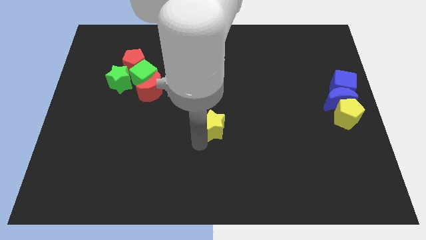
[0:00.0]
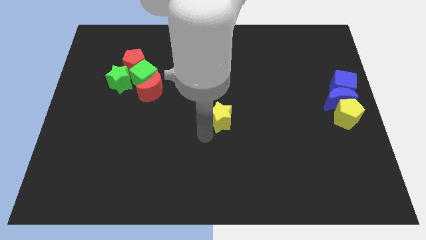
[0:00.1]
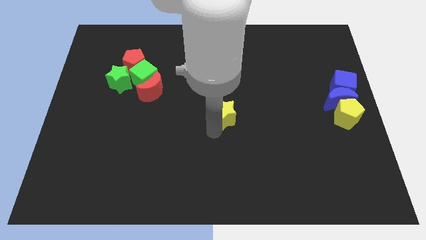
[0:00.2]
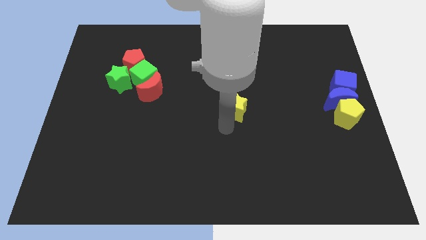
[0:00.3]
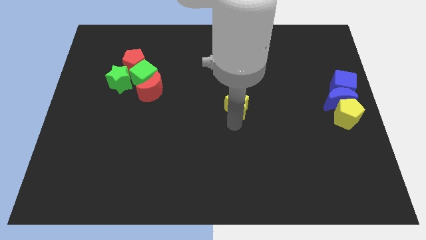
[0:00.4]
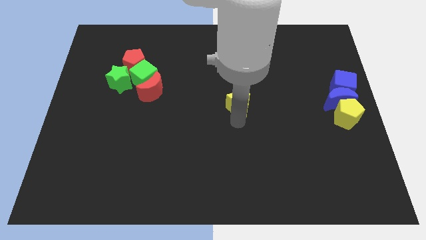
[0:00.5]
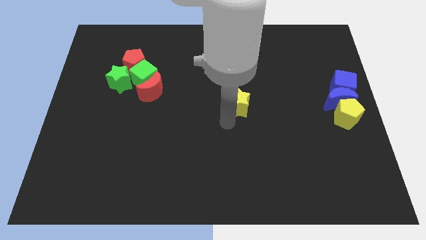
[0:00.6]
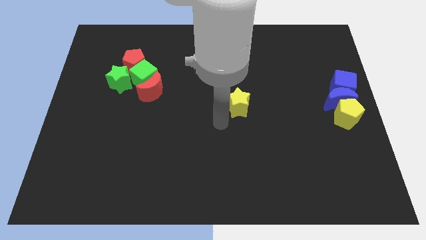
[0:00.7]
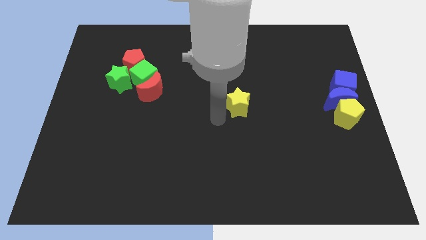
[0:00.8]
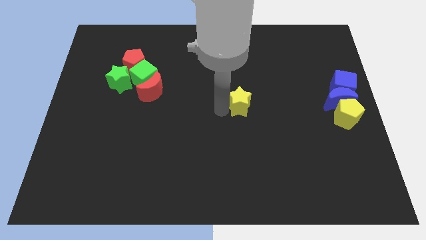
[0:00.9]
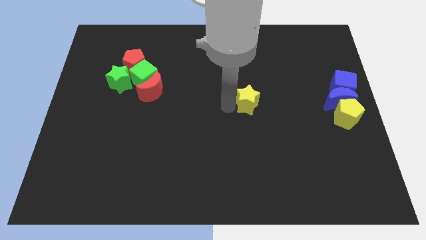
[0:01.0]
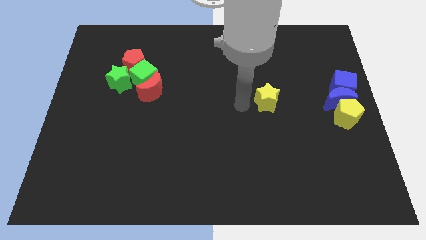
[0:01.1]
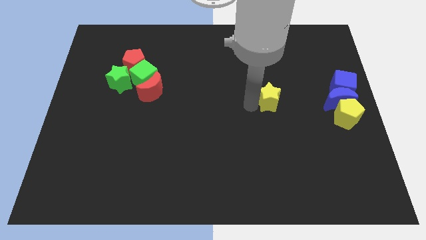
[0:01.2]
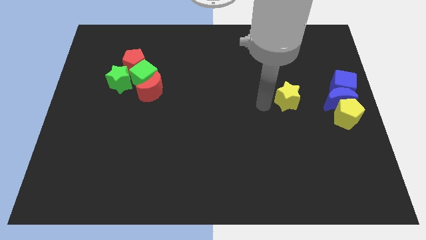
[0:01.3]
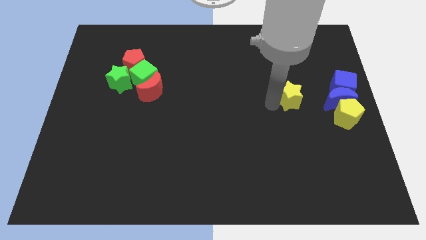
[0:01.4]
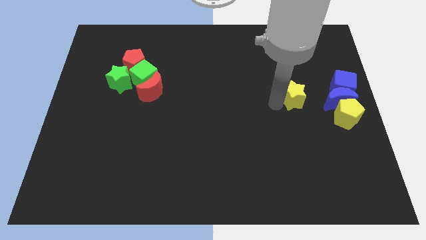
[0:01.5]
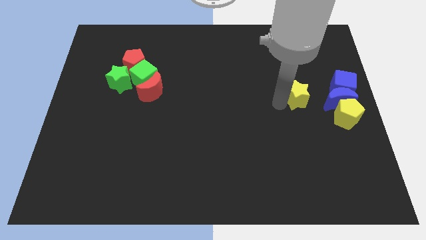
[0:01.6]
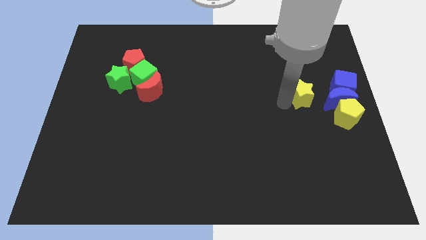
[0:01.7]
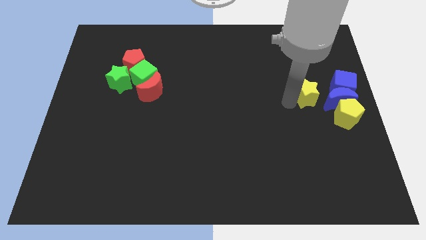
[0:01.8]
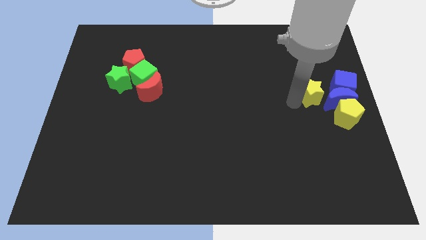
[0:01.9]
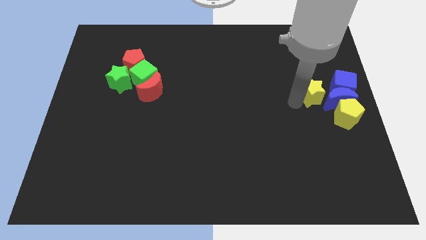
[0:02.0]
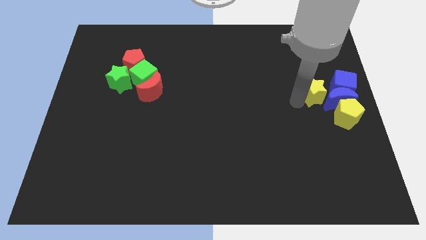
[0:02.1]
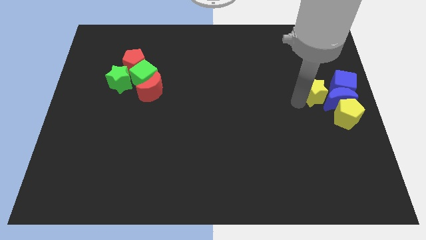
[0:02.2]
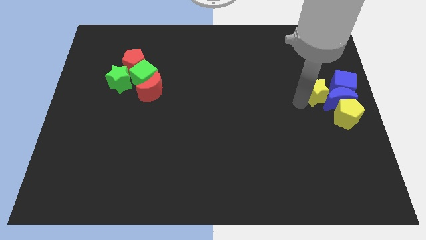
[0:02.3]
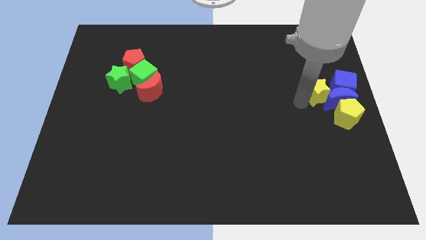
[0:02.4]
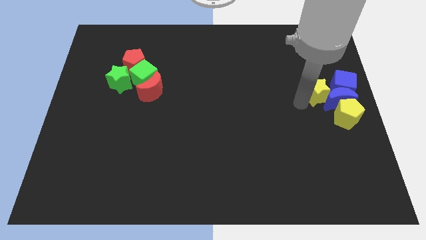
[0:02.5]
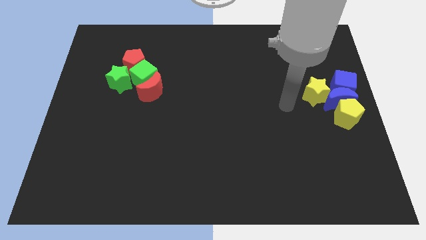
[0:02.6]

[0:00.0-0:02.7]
place yellow star beside blue cube

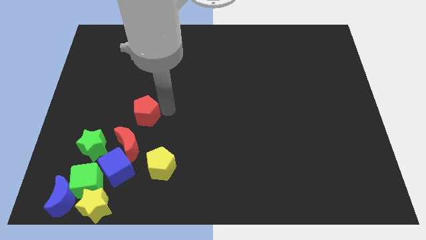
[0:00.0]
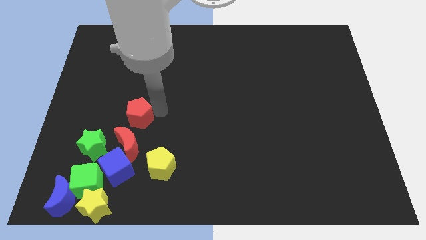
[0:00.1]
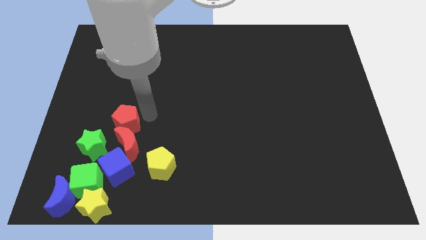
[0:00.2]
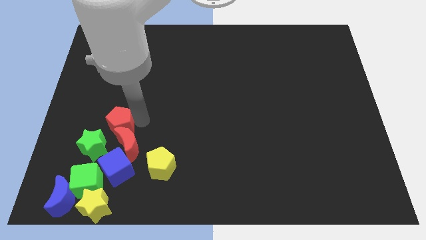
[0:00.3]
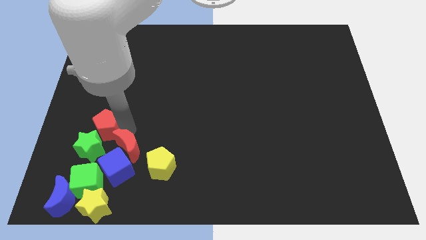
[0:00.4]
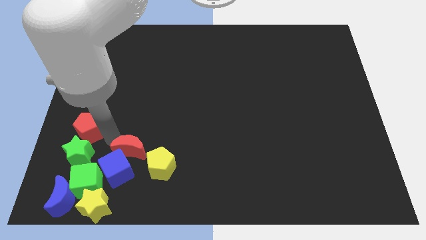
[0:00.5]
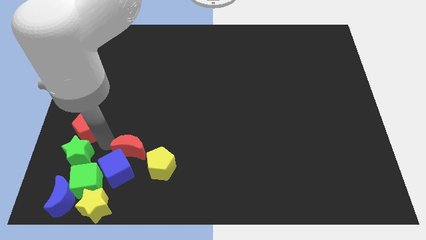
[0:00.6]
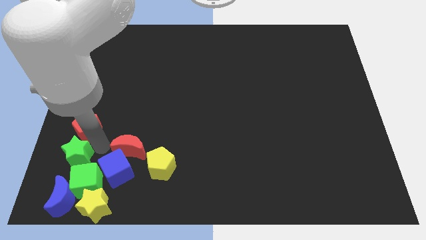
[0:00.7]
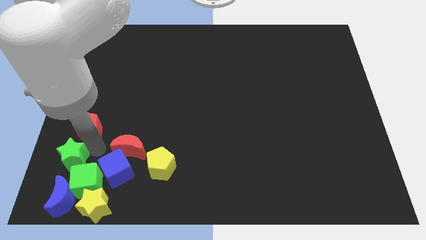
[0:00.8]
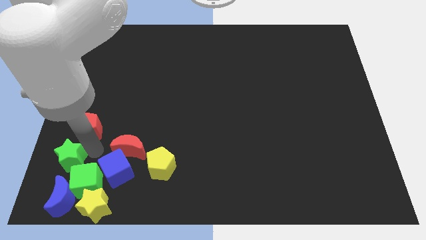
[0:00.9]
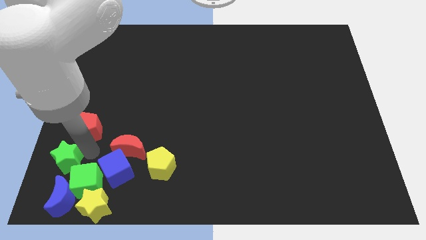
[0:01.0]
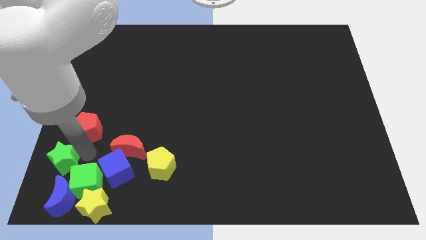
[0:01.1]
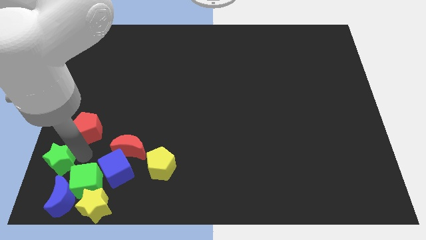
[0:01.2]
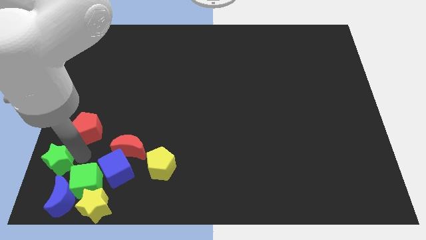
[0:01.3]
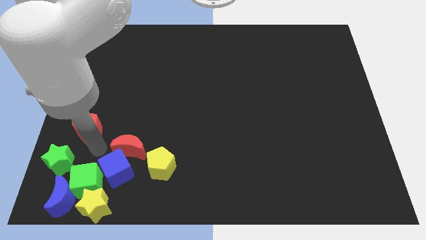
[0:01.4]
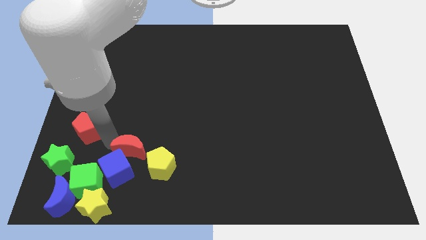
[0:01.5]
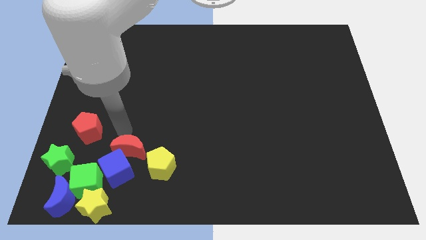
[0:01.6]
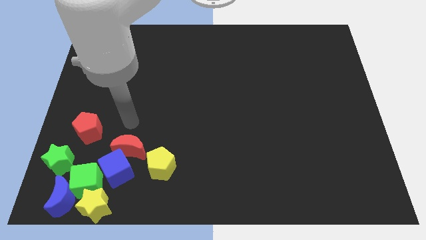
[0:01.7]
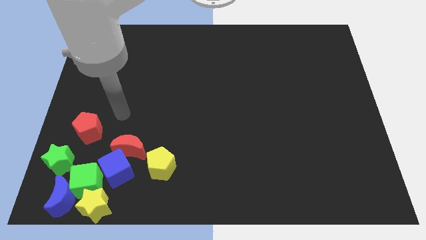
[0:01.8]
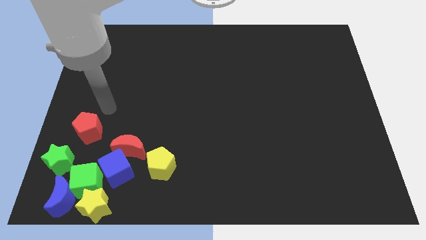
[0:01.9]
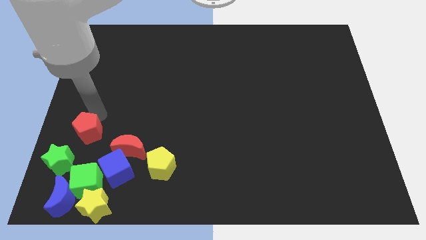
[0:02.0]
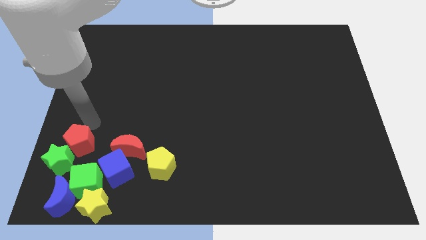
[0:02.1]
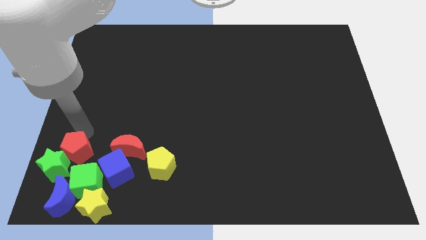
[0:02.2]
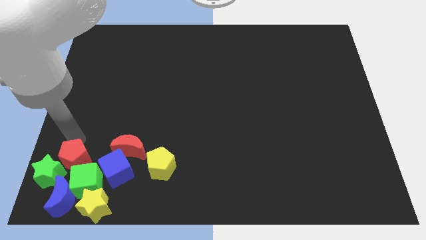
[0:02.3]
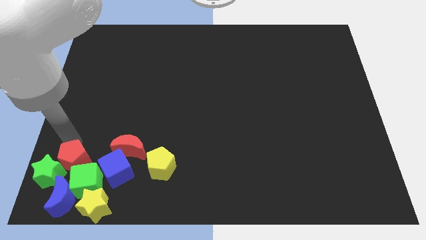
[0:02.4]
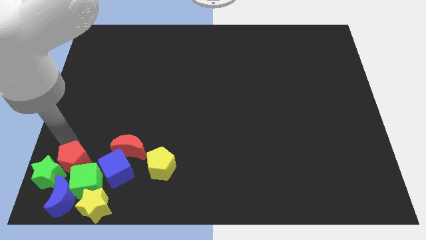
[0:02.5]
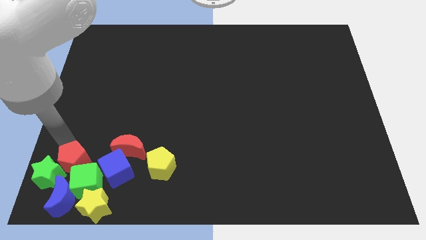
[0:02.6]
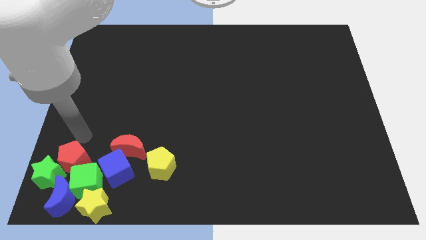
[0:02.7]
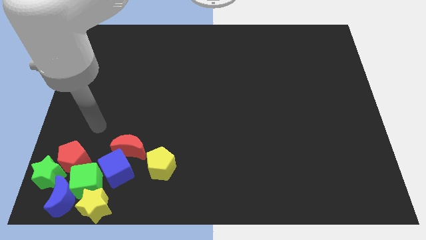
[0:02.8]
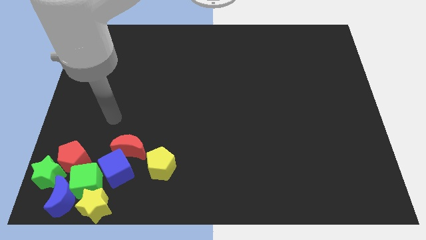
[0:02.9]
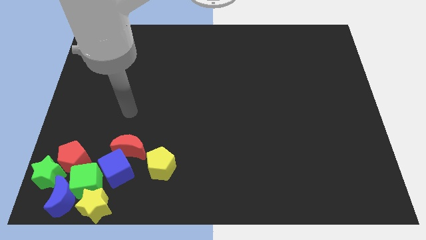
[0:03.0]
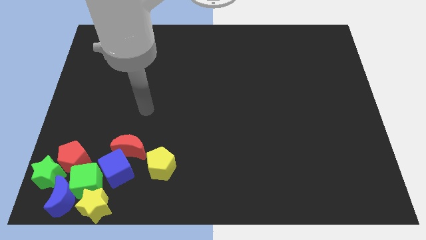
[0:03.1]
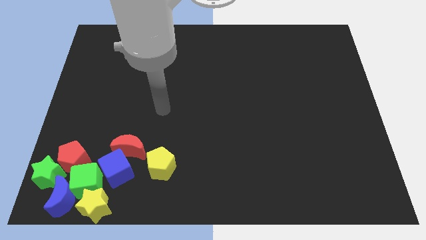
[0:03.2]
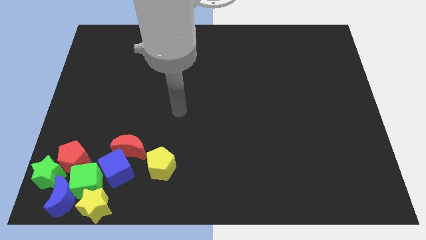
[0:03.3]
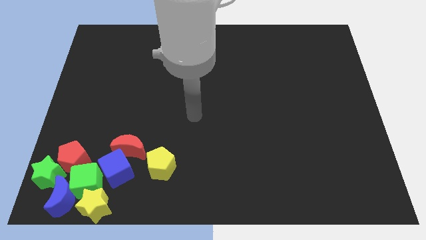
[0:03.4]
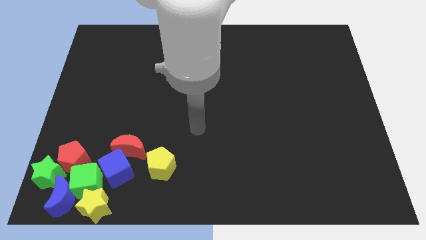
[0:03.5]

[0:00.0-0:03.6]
move red pentagon to the top of green cube

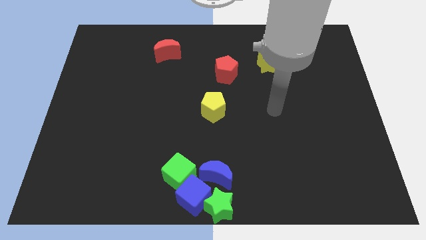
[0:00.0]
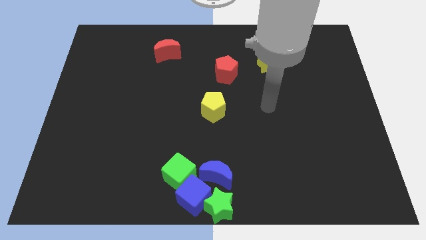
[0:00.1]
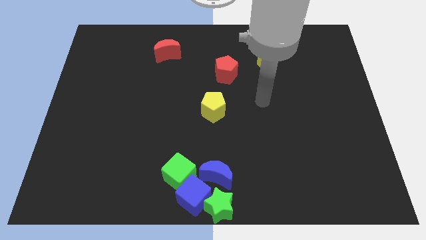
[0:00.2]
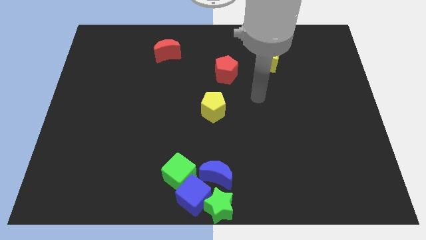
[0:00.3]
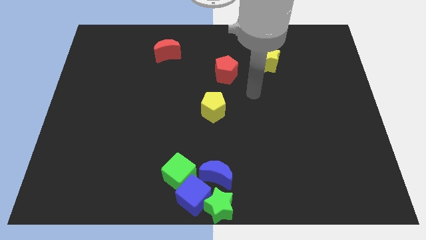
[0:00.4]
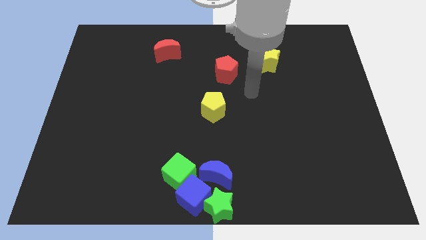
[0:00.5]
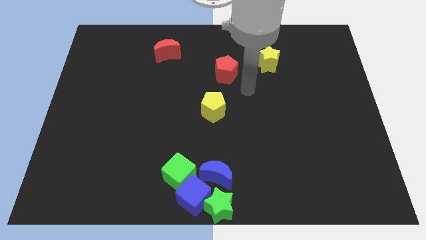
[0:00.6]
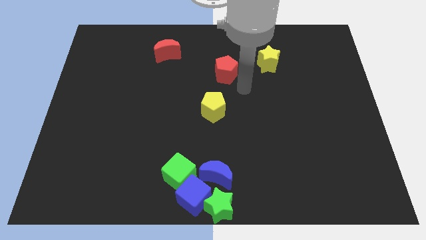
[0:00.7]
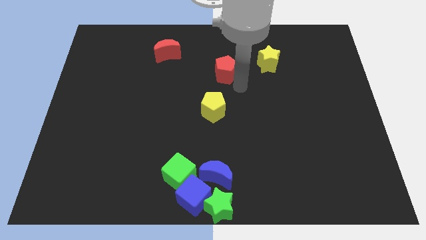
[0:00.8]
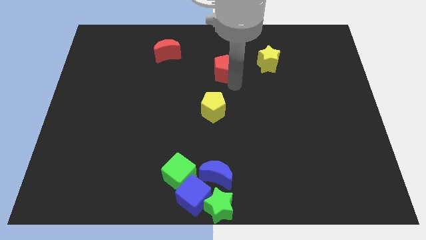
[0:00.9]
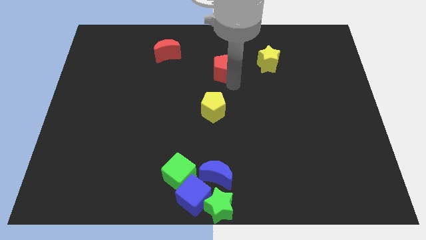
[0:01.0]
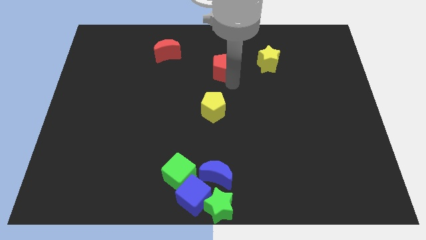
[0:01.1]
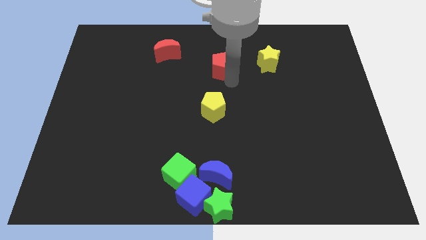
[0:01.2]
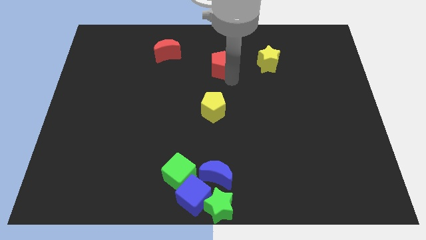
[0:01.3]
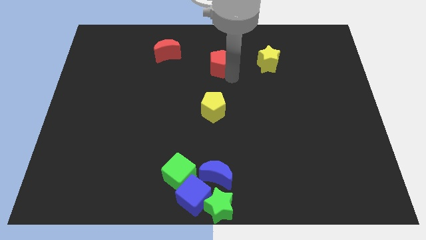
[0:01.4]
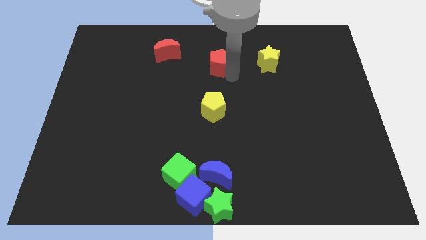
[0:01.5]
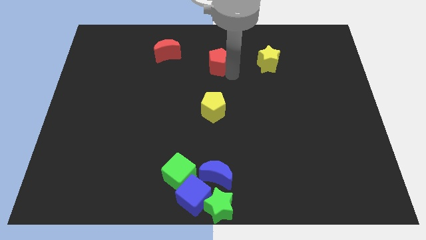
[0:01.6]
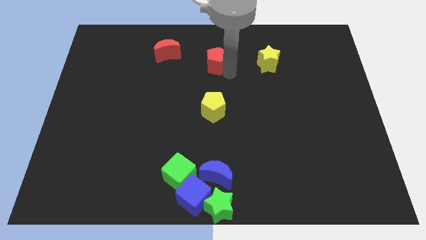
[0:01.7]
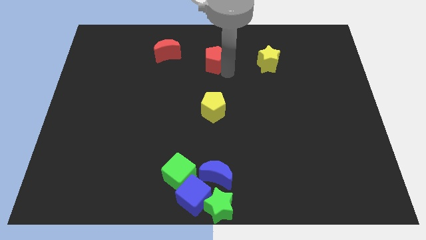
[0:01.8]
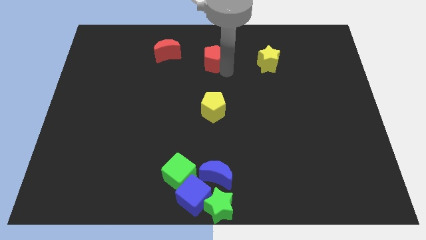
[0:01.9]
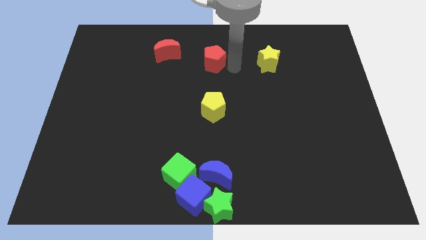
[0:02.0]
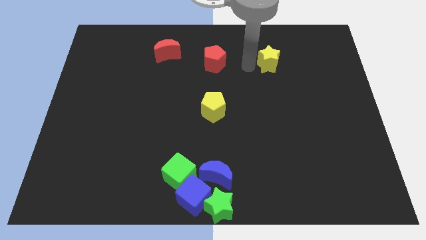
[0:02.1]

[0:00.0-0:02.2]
move the reed pentagon between the red moon and yellow star

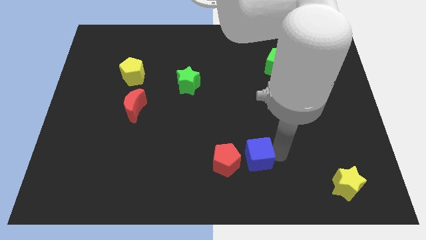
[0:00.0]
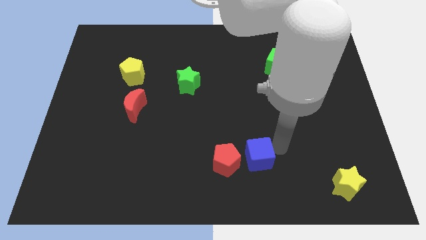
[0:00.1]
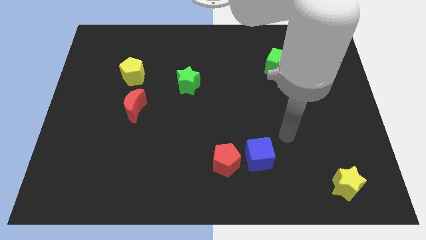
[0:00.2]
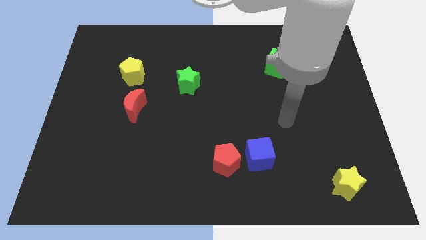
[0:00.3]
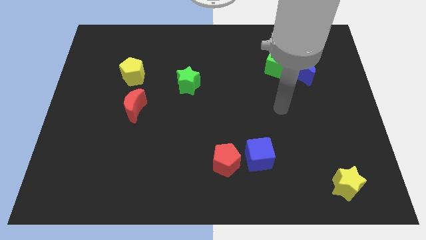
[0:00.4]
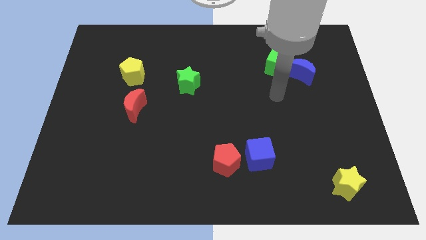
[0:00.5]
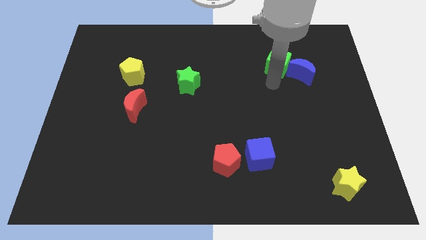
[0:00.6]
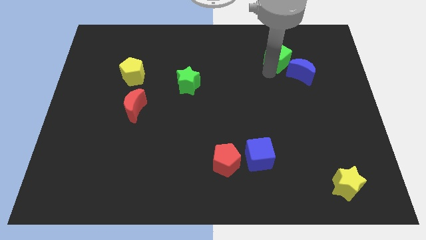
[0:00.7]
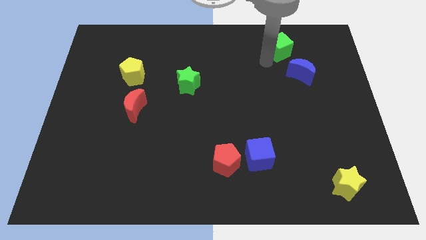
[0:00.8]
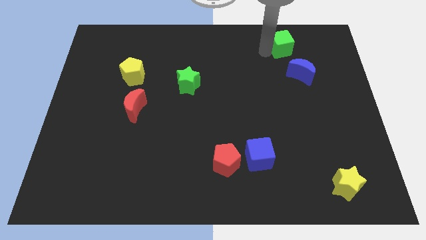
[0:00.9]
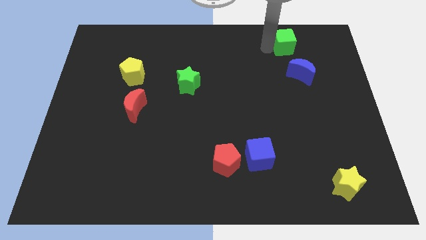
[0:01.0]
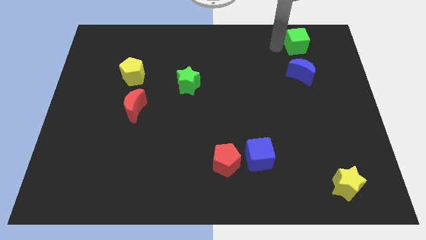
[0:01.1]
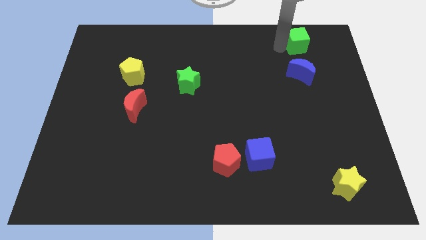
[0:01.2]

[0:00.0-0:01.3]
move the green cube to the top side of the blue crescent
